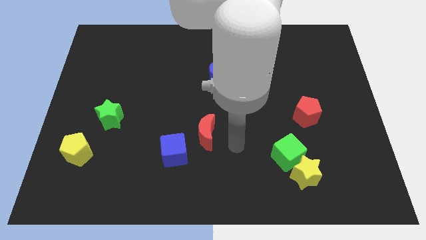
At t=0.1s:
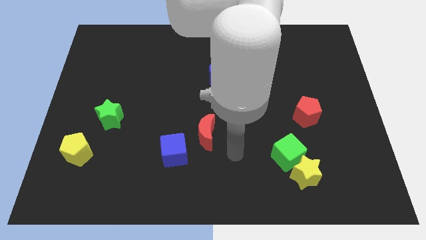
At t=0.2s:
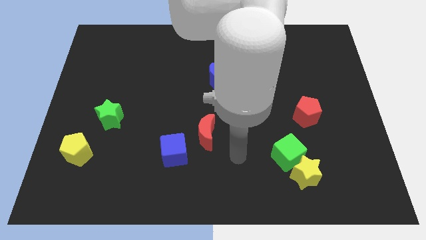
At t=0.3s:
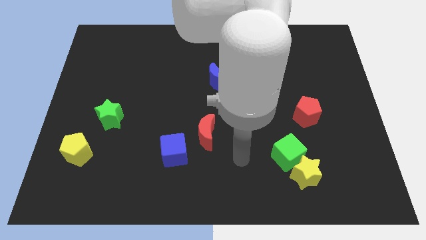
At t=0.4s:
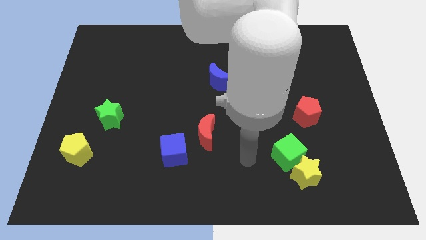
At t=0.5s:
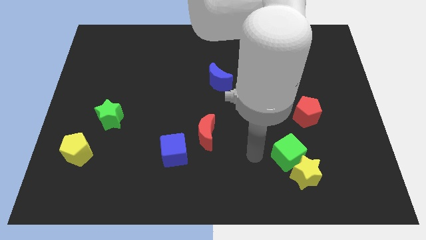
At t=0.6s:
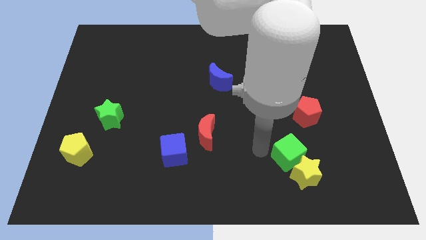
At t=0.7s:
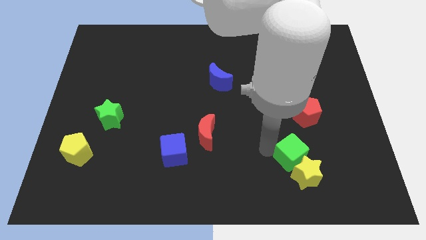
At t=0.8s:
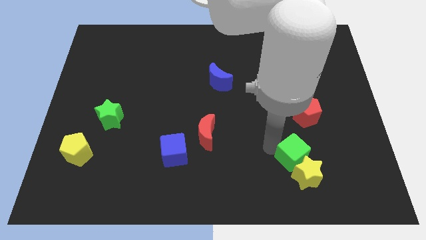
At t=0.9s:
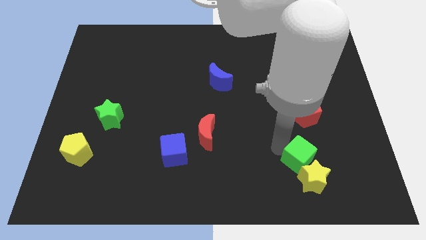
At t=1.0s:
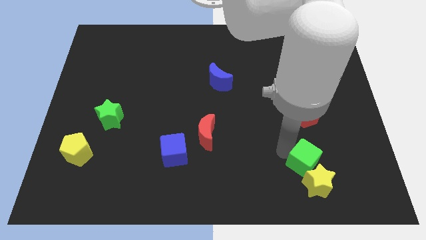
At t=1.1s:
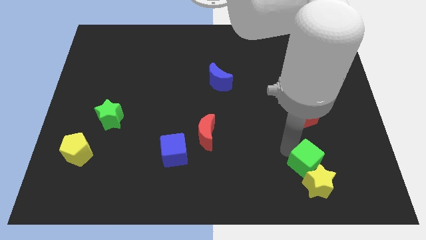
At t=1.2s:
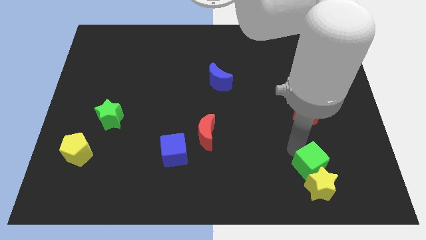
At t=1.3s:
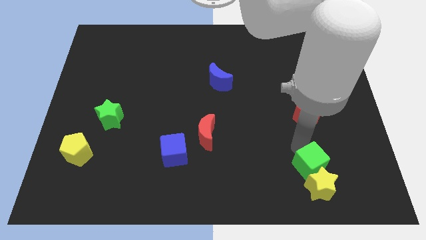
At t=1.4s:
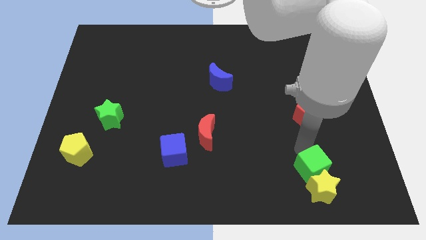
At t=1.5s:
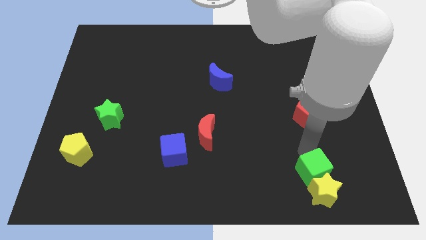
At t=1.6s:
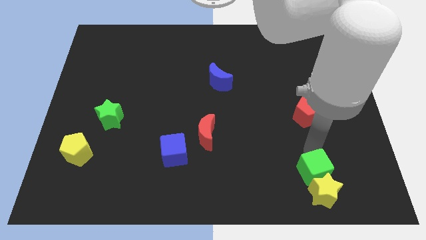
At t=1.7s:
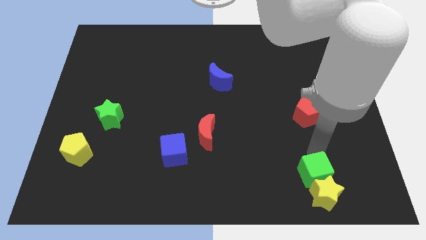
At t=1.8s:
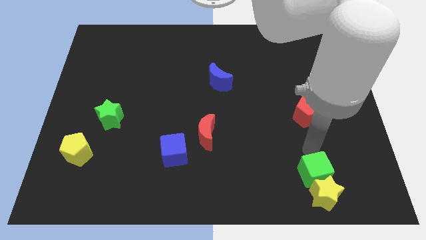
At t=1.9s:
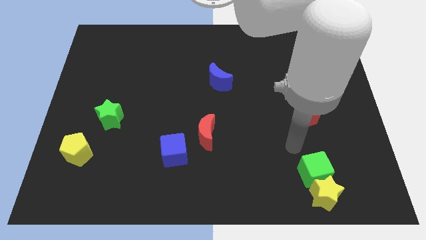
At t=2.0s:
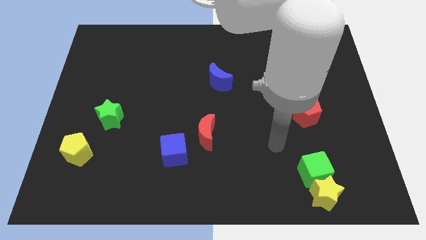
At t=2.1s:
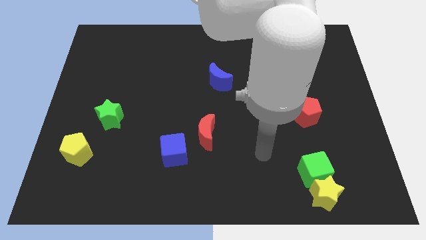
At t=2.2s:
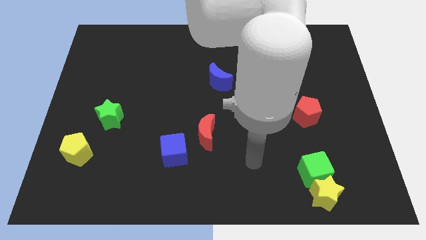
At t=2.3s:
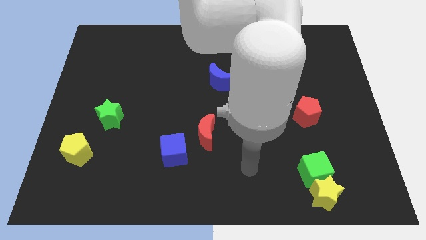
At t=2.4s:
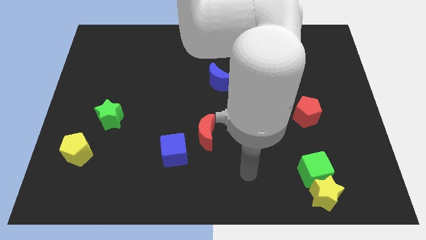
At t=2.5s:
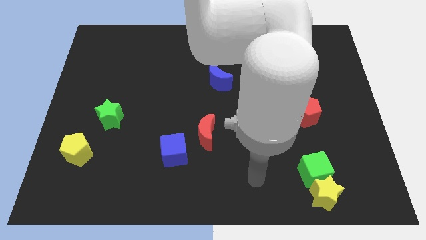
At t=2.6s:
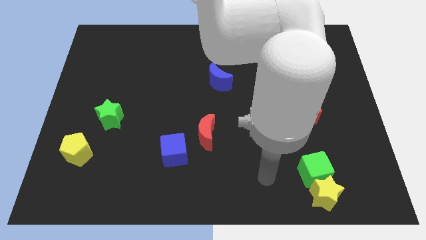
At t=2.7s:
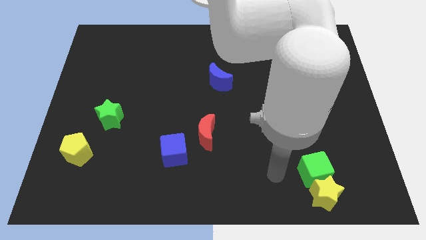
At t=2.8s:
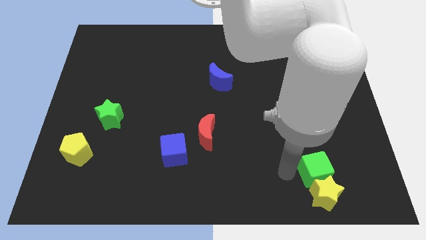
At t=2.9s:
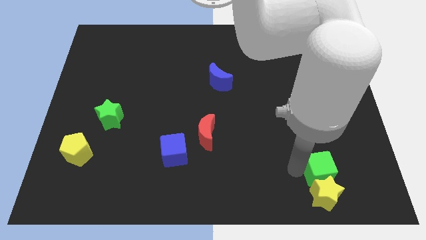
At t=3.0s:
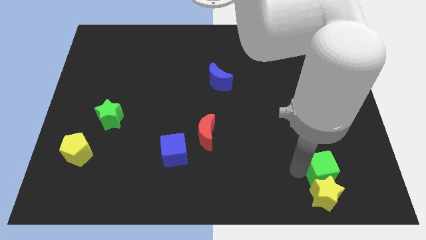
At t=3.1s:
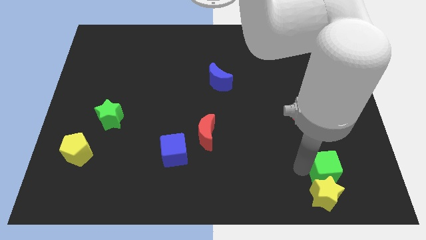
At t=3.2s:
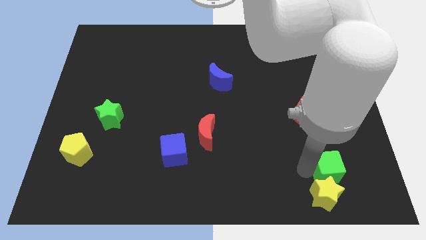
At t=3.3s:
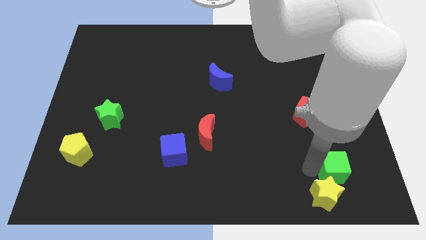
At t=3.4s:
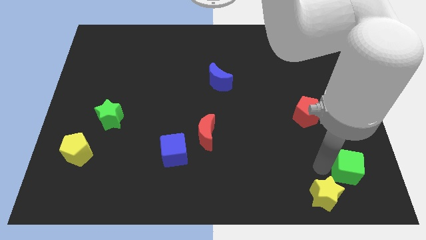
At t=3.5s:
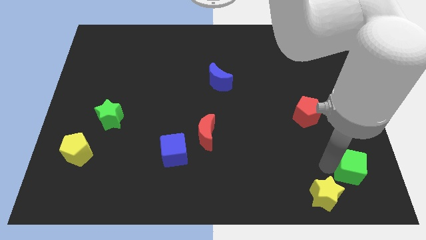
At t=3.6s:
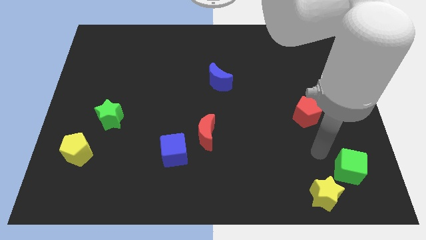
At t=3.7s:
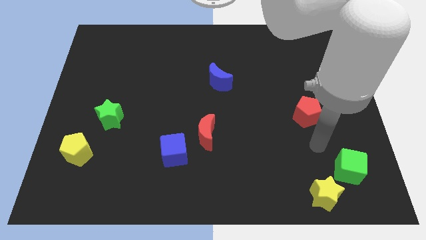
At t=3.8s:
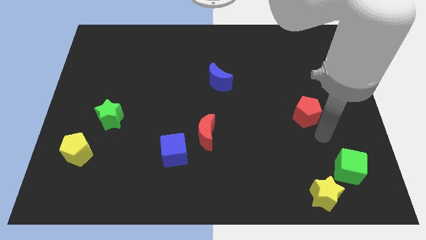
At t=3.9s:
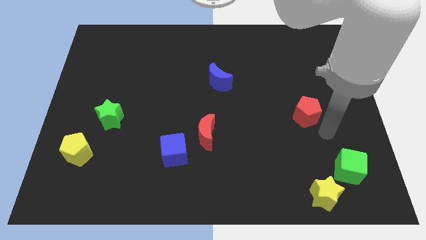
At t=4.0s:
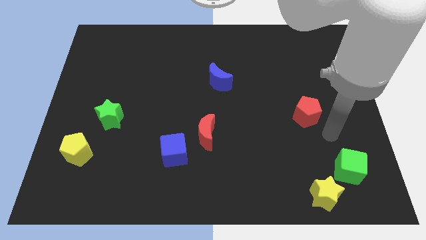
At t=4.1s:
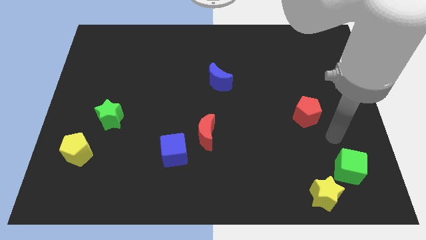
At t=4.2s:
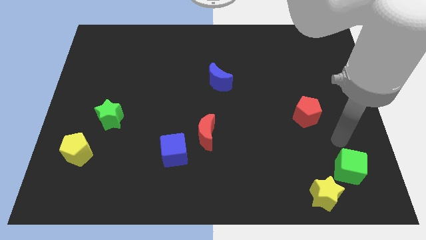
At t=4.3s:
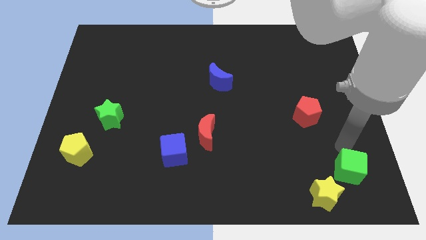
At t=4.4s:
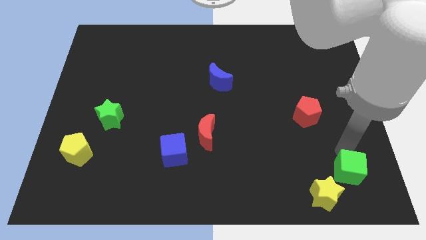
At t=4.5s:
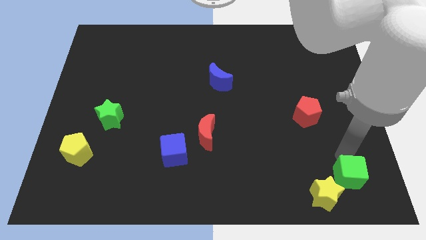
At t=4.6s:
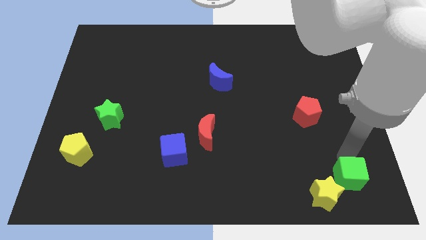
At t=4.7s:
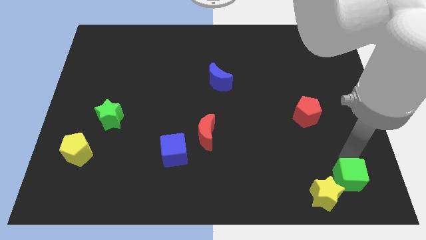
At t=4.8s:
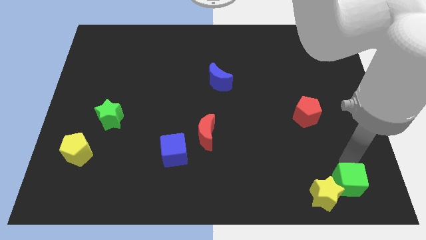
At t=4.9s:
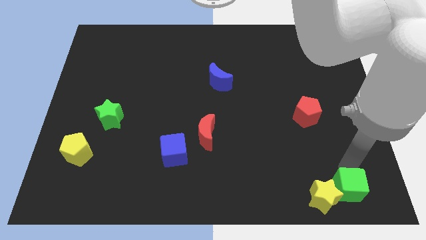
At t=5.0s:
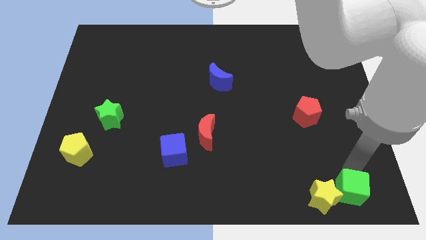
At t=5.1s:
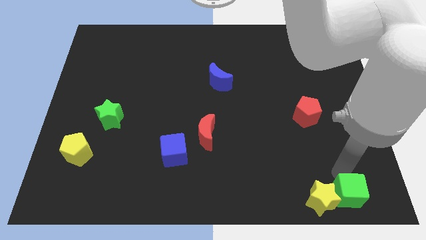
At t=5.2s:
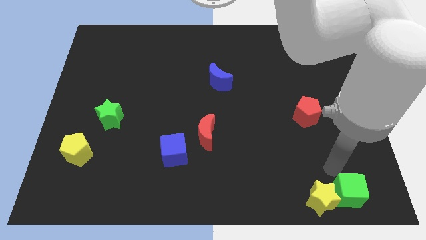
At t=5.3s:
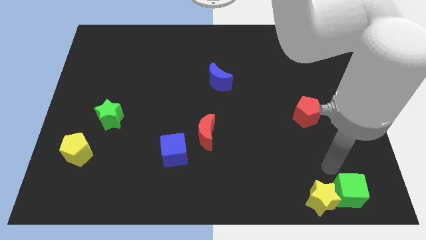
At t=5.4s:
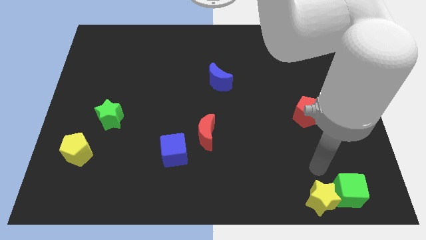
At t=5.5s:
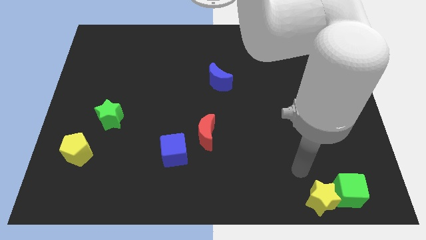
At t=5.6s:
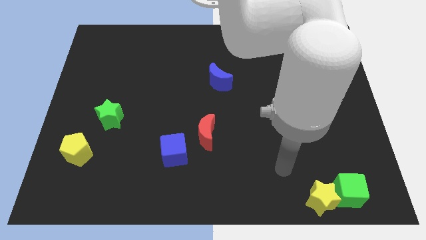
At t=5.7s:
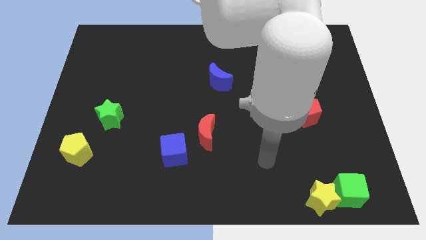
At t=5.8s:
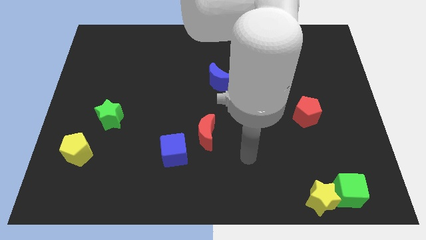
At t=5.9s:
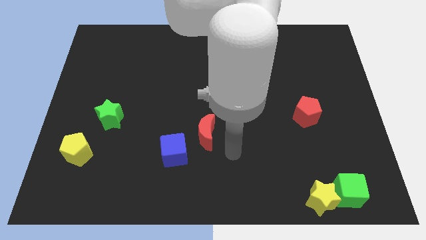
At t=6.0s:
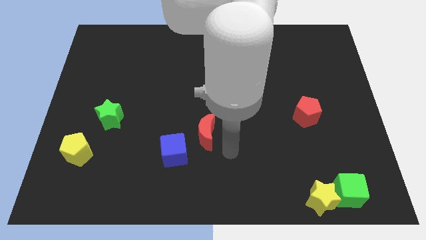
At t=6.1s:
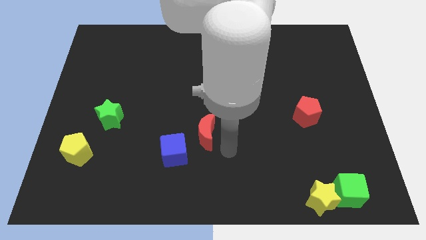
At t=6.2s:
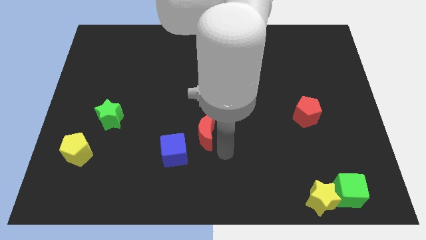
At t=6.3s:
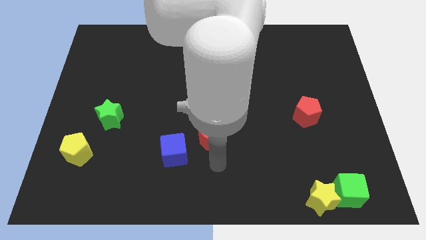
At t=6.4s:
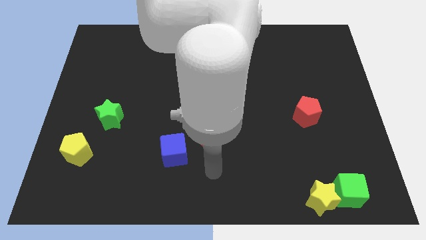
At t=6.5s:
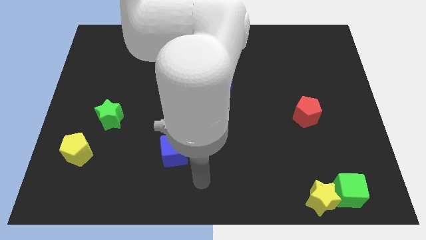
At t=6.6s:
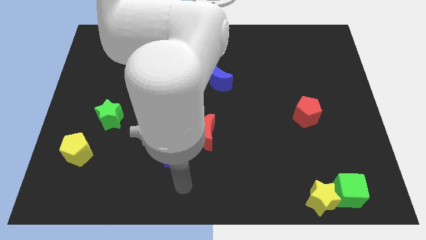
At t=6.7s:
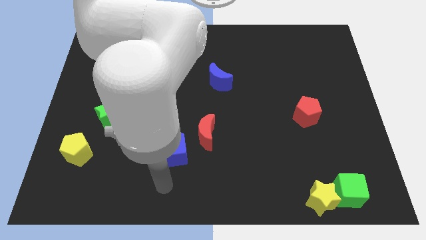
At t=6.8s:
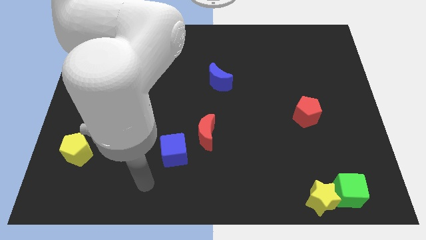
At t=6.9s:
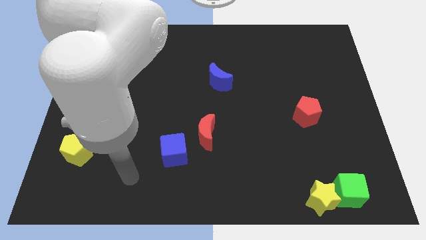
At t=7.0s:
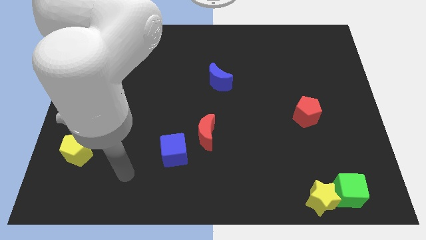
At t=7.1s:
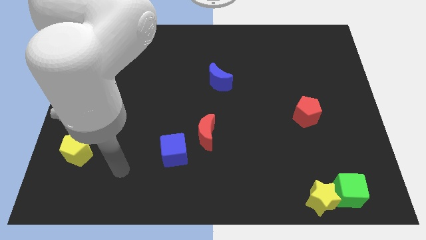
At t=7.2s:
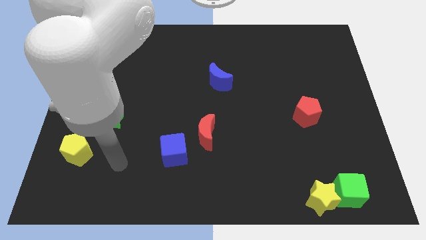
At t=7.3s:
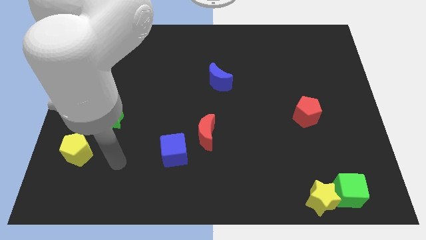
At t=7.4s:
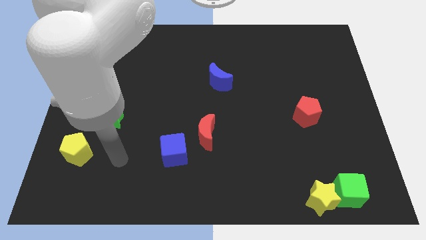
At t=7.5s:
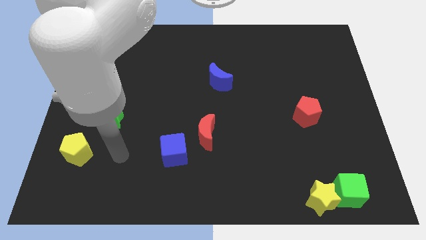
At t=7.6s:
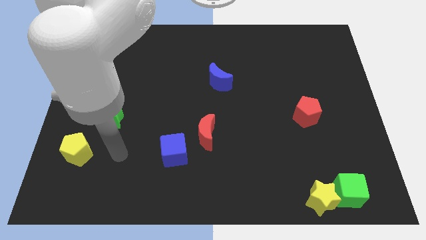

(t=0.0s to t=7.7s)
place the green cube to right side of the yellow star

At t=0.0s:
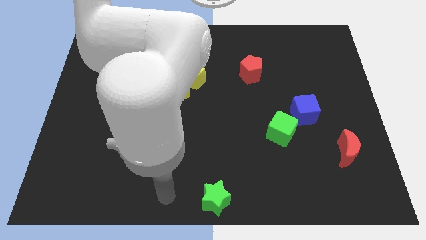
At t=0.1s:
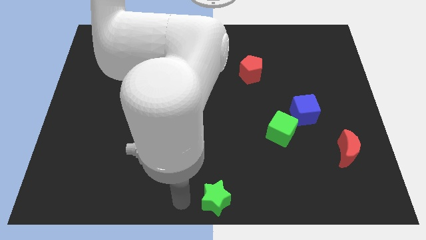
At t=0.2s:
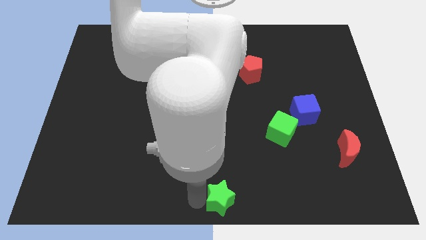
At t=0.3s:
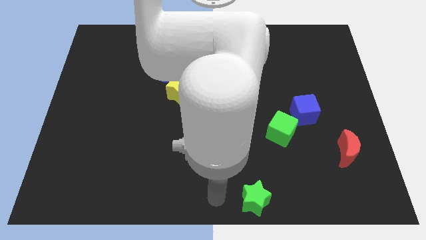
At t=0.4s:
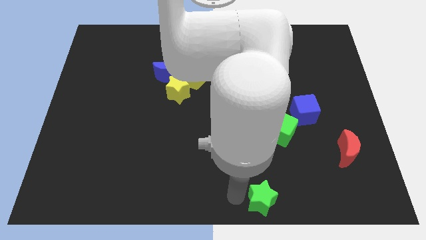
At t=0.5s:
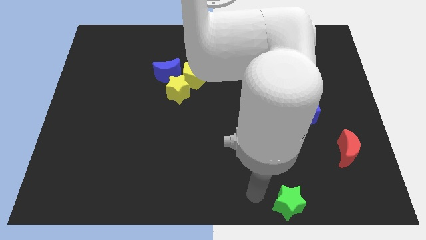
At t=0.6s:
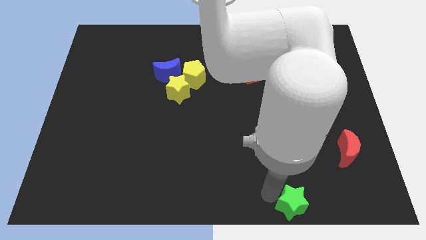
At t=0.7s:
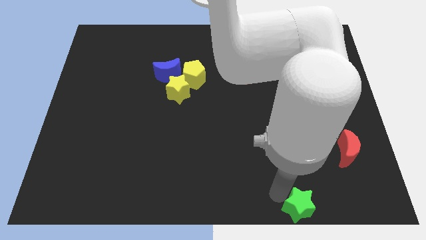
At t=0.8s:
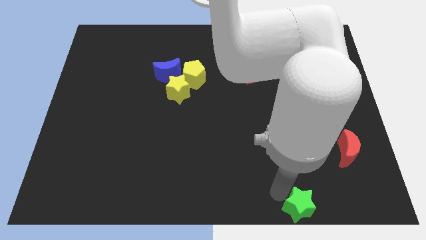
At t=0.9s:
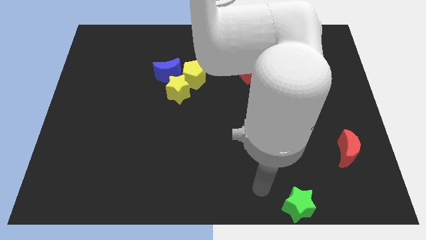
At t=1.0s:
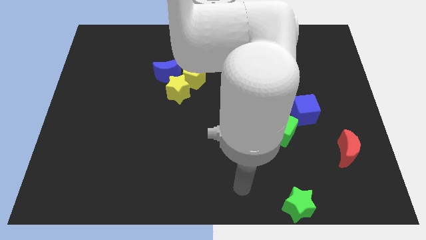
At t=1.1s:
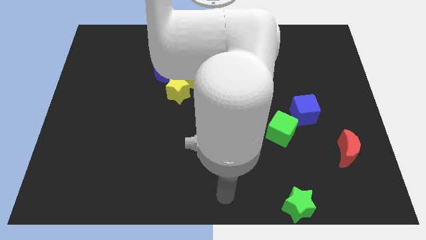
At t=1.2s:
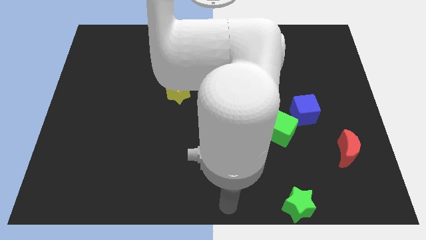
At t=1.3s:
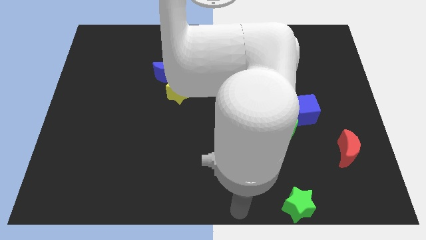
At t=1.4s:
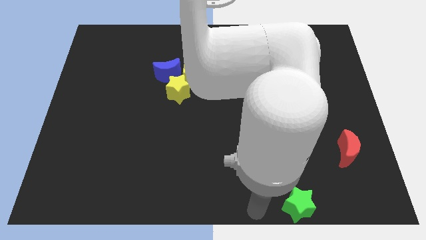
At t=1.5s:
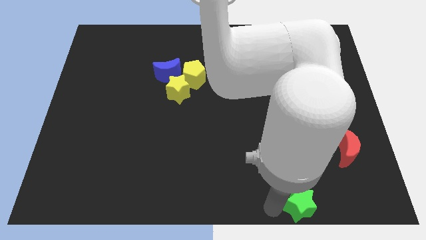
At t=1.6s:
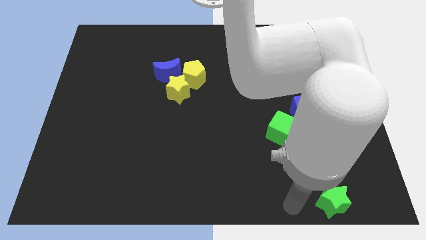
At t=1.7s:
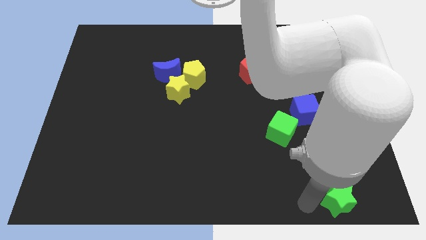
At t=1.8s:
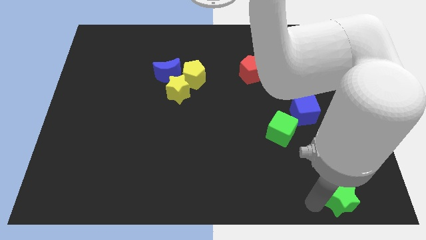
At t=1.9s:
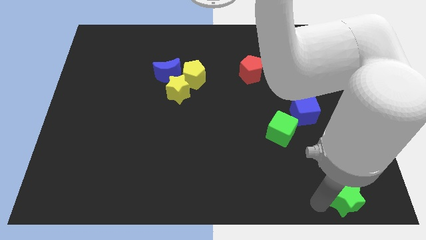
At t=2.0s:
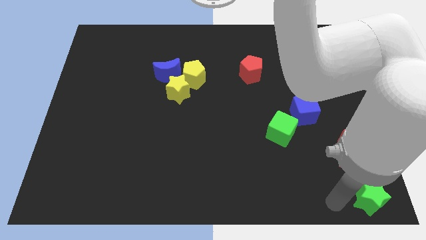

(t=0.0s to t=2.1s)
put the green star below the red moon
